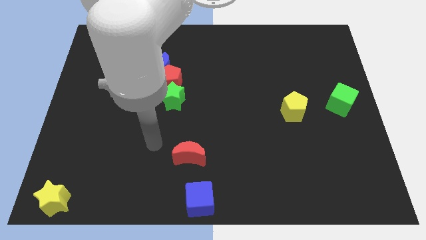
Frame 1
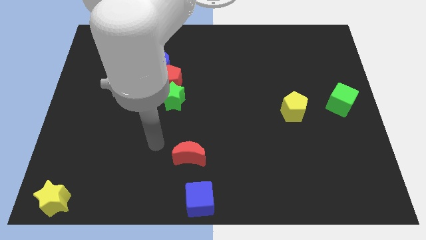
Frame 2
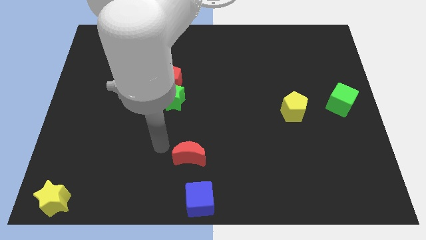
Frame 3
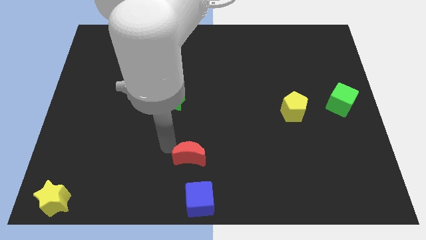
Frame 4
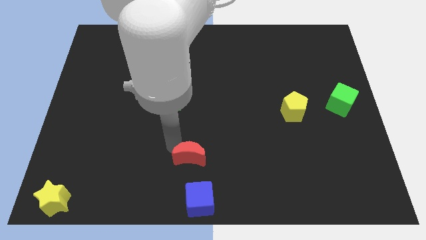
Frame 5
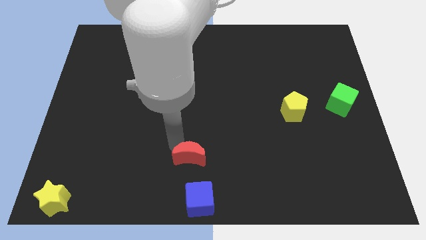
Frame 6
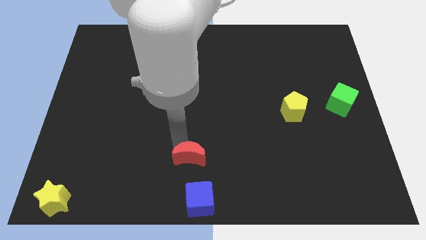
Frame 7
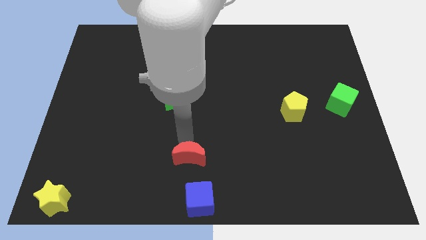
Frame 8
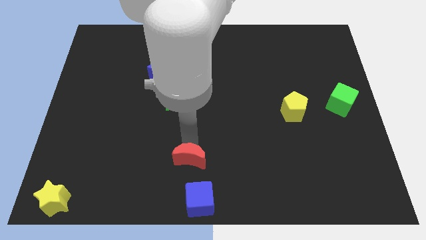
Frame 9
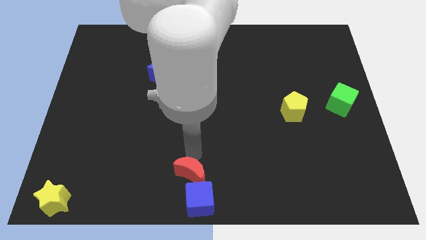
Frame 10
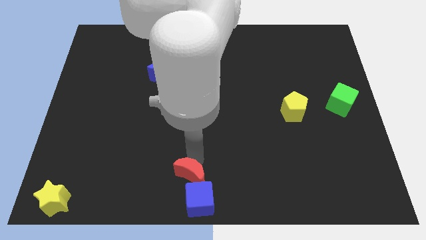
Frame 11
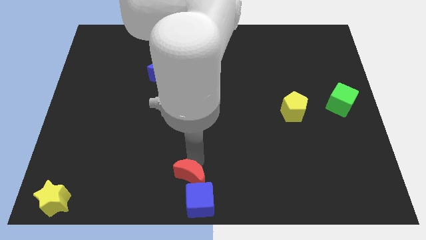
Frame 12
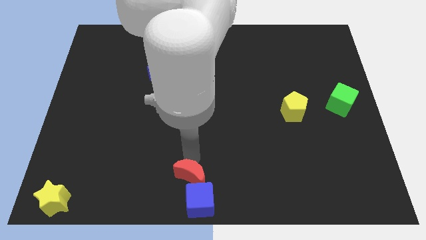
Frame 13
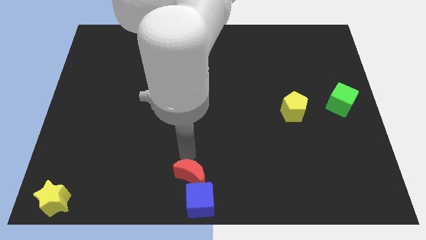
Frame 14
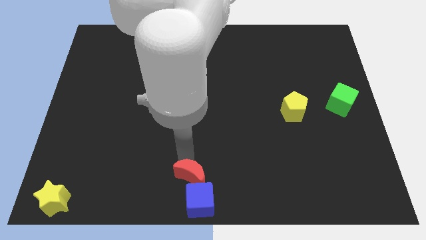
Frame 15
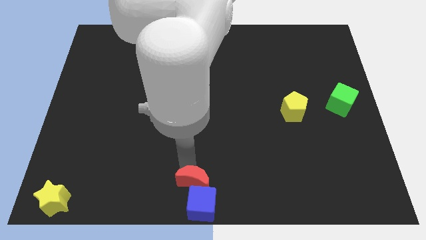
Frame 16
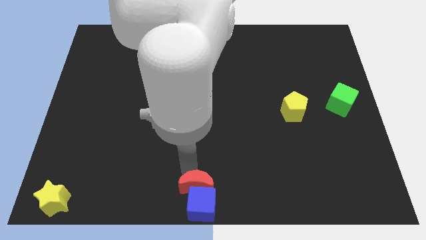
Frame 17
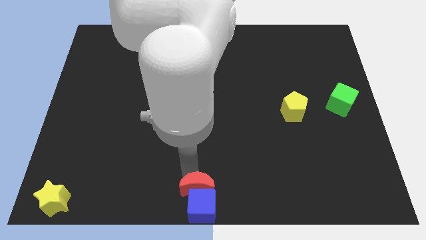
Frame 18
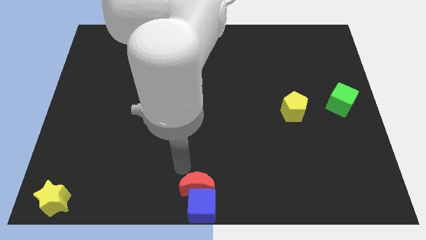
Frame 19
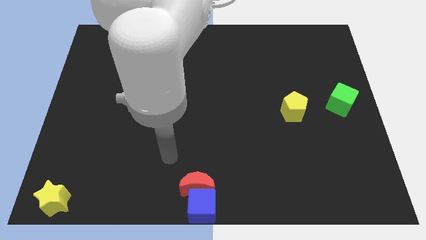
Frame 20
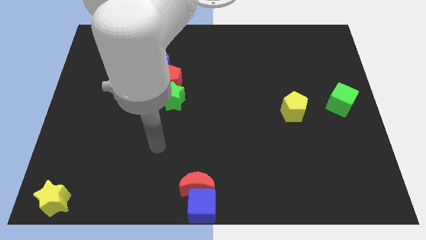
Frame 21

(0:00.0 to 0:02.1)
push red moon into blue cube

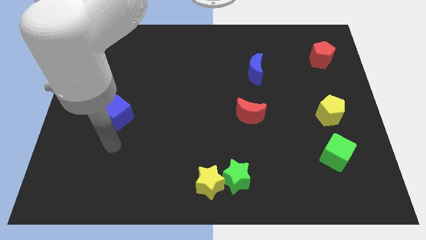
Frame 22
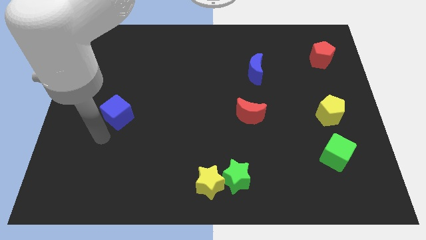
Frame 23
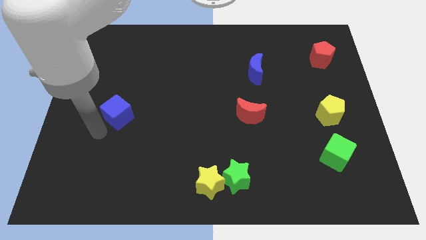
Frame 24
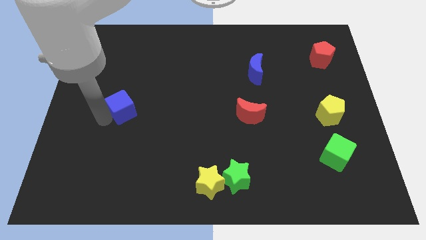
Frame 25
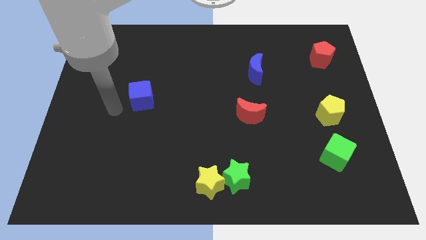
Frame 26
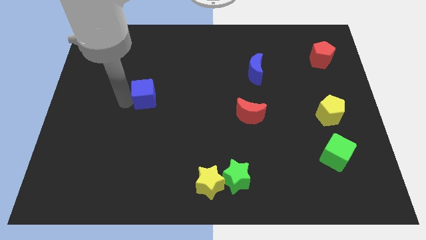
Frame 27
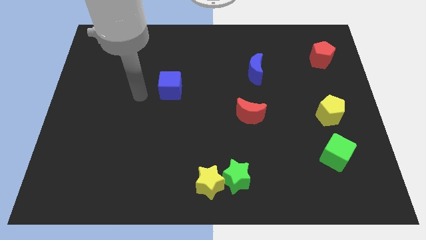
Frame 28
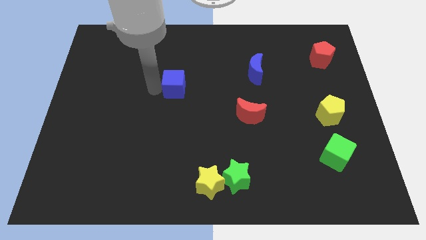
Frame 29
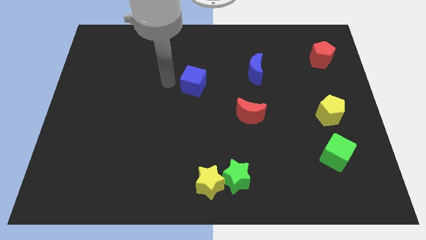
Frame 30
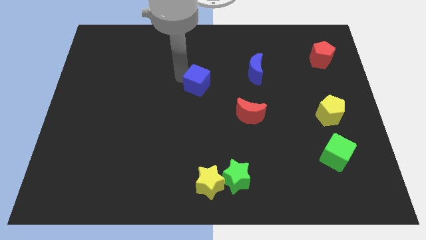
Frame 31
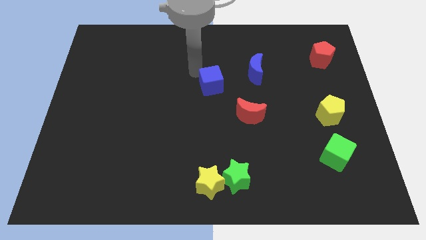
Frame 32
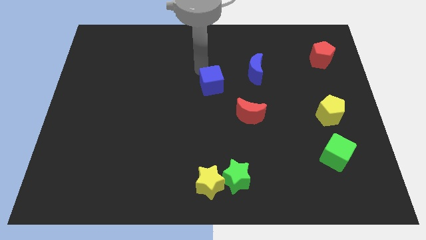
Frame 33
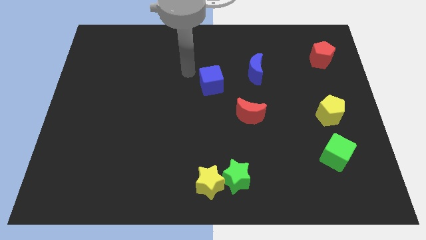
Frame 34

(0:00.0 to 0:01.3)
take the blue cube towards the blue crescent

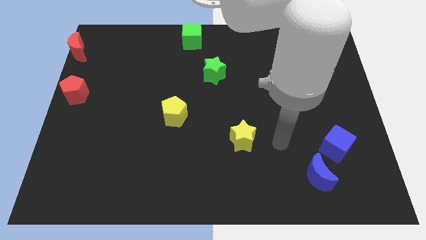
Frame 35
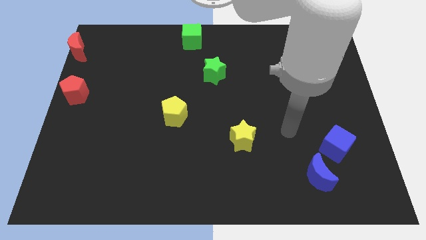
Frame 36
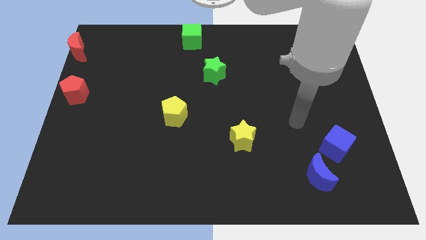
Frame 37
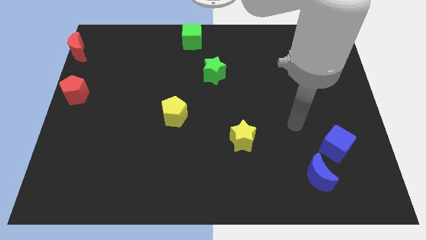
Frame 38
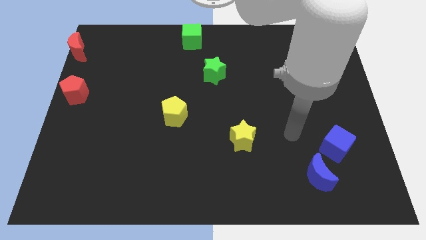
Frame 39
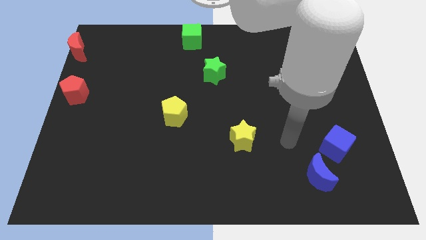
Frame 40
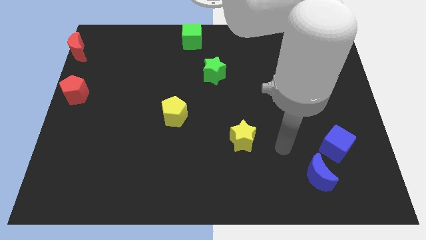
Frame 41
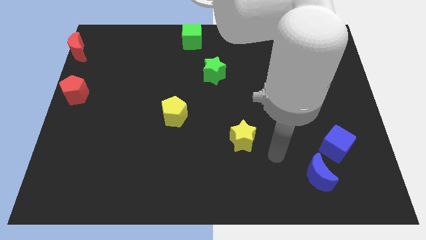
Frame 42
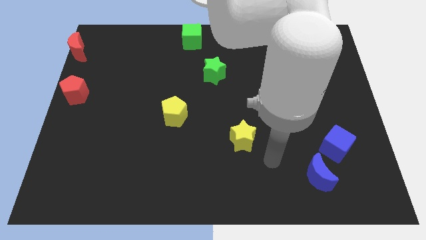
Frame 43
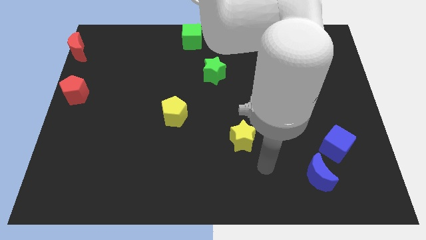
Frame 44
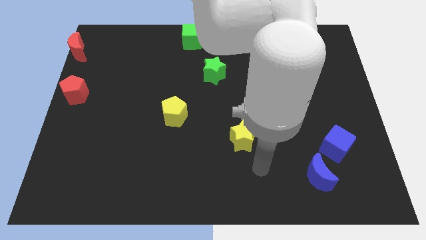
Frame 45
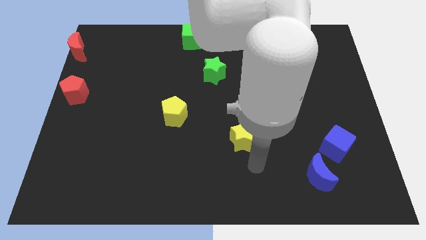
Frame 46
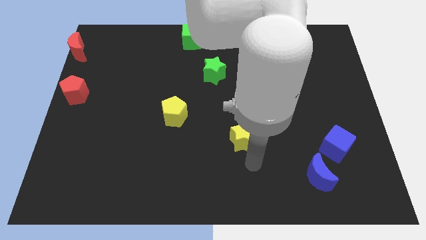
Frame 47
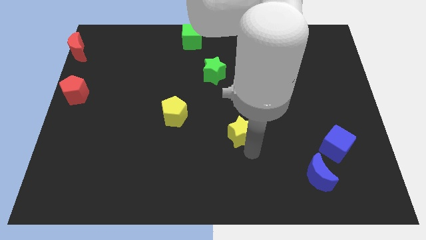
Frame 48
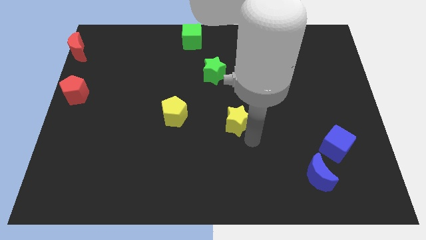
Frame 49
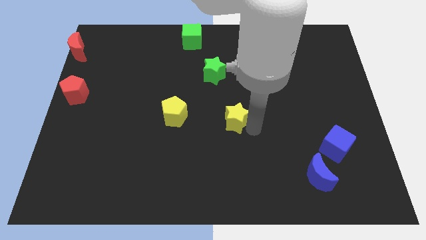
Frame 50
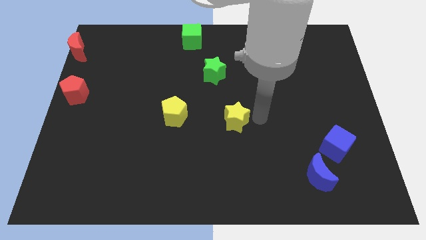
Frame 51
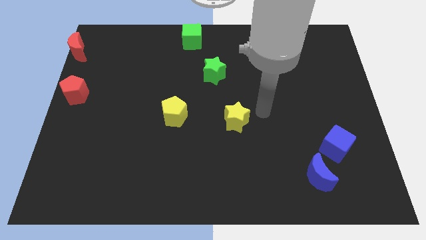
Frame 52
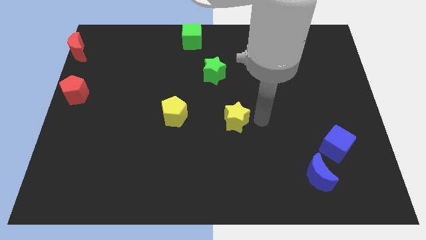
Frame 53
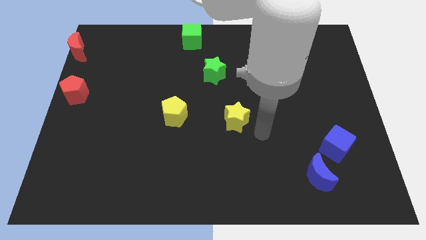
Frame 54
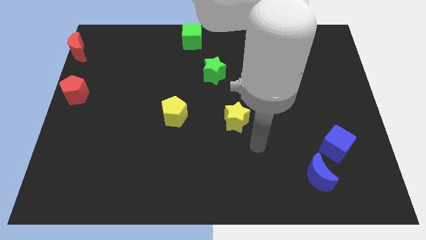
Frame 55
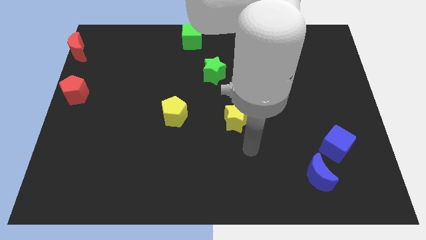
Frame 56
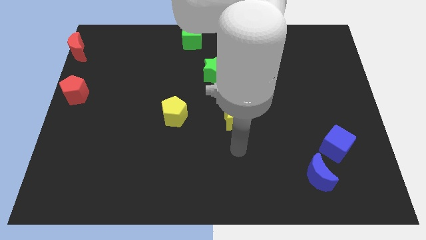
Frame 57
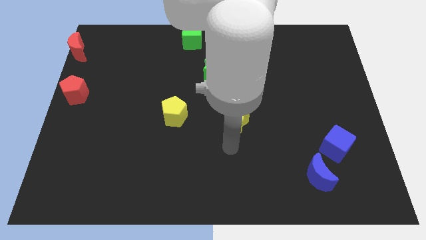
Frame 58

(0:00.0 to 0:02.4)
move the yellow star horizontally right to the yellow pentagon

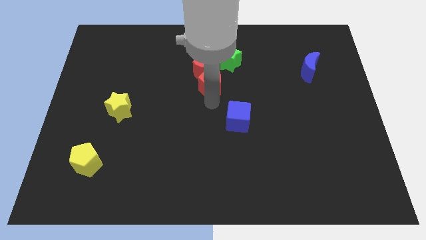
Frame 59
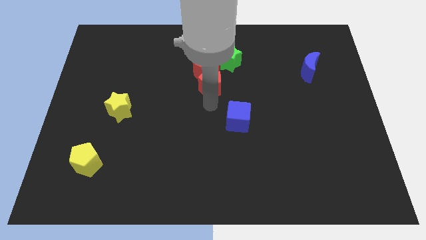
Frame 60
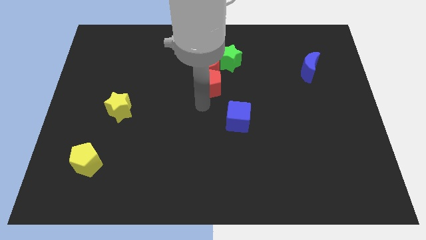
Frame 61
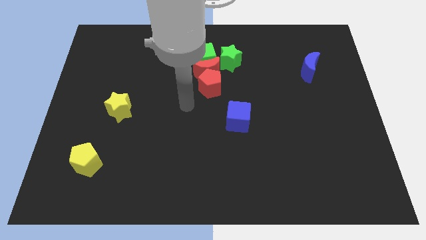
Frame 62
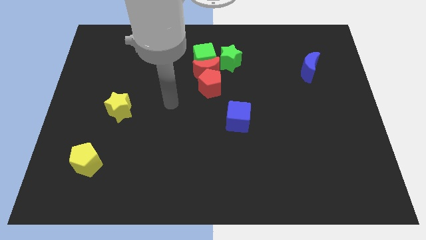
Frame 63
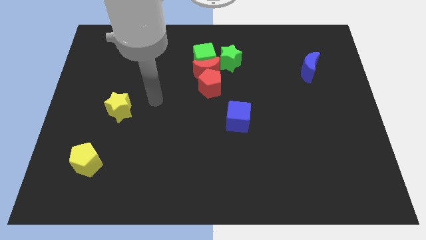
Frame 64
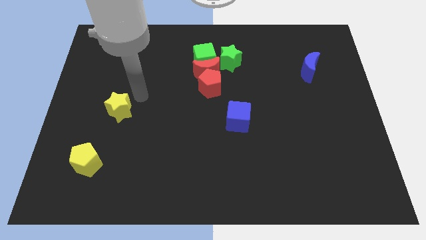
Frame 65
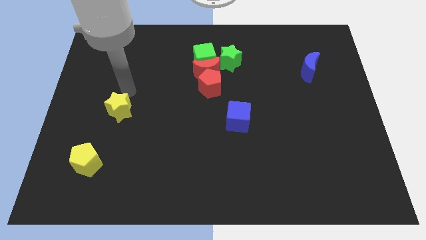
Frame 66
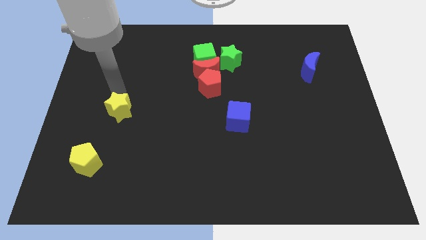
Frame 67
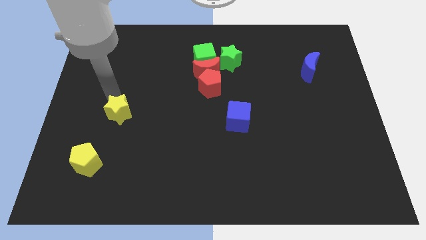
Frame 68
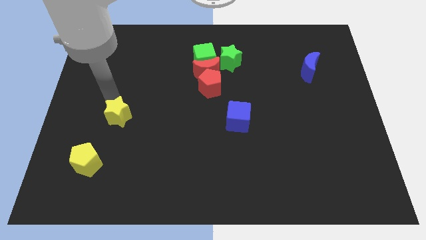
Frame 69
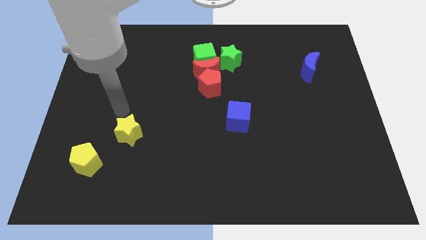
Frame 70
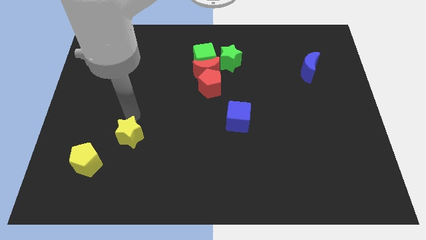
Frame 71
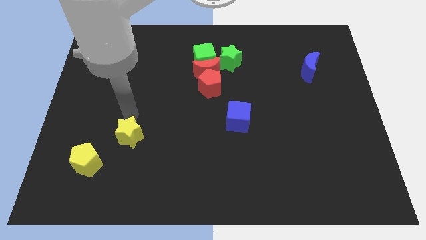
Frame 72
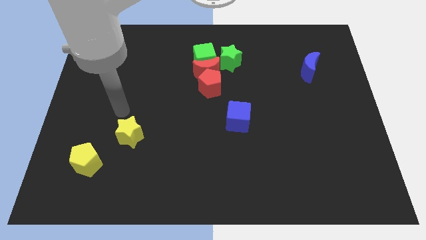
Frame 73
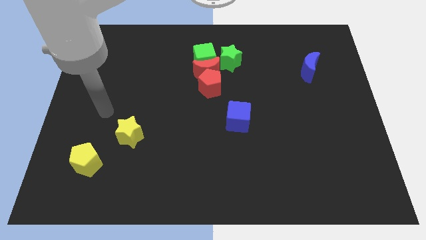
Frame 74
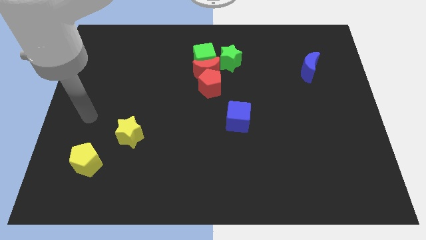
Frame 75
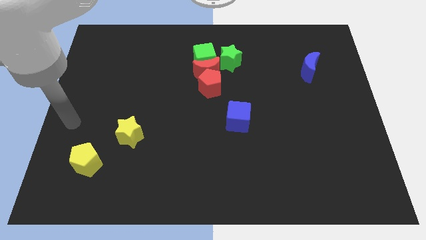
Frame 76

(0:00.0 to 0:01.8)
place the yellow star diagonal to the yellow pentagon

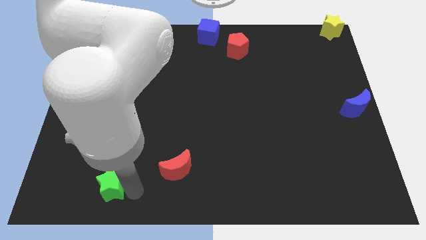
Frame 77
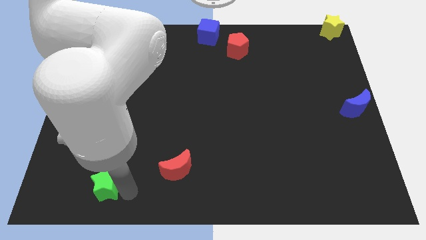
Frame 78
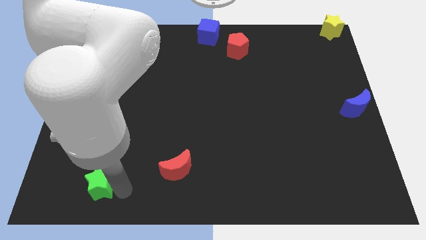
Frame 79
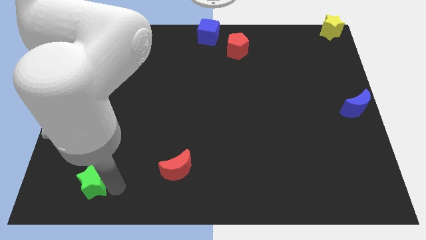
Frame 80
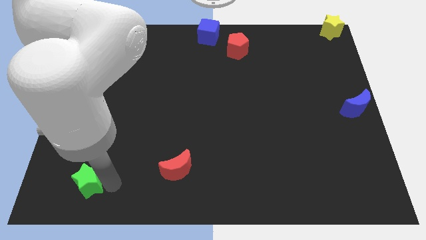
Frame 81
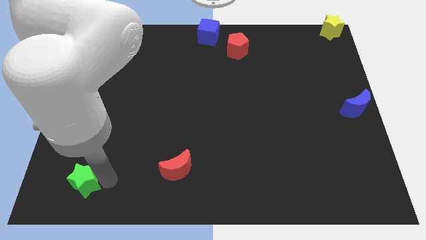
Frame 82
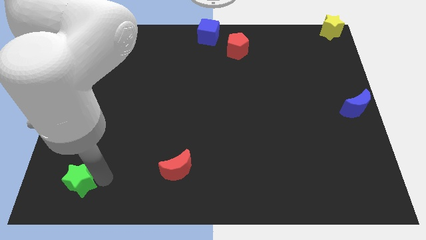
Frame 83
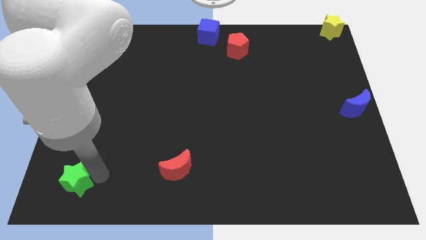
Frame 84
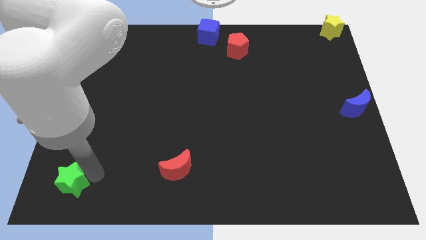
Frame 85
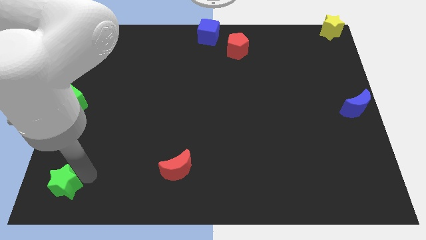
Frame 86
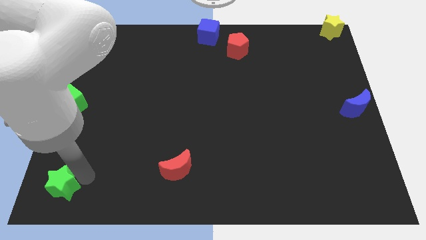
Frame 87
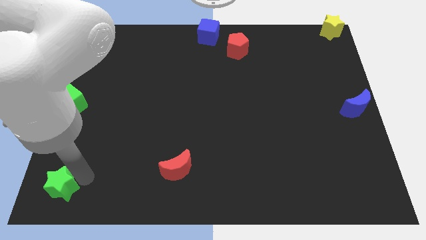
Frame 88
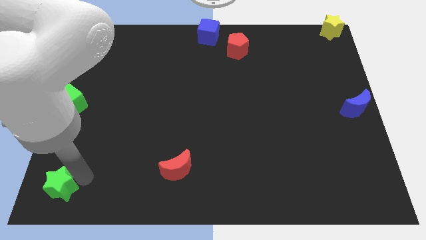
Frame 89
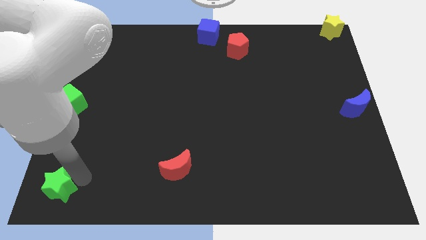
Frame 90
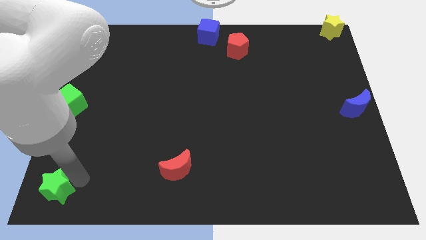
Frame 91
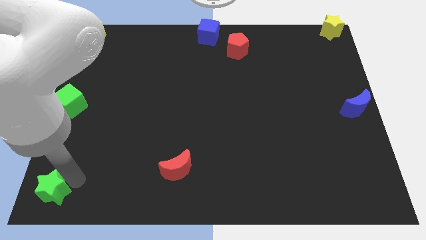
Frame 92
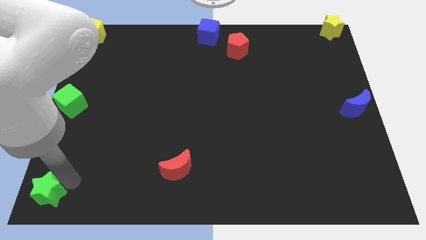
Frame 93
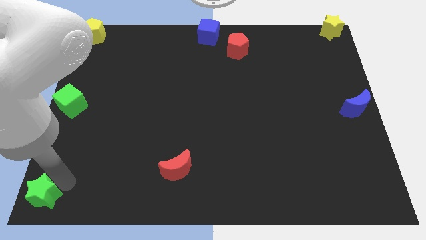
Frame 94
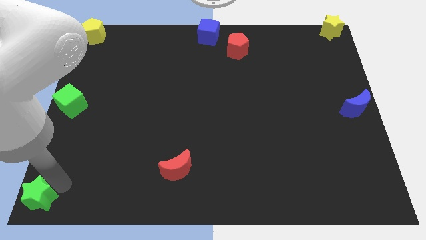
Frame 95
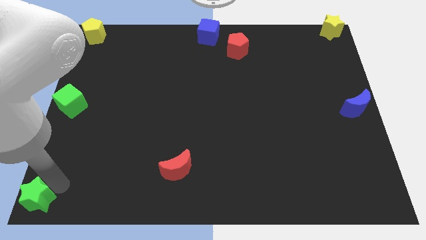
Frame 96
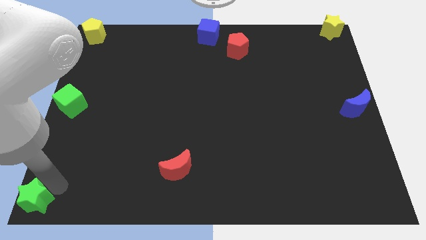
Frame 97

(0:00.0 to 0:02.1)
push the green star bottom left the board
